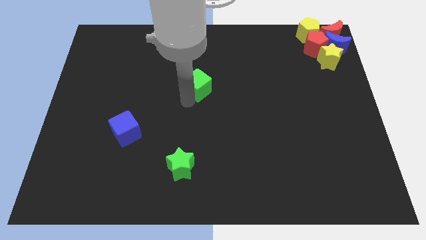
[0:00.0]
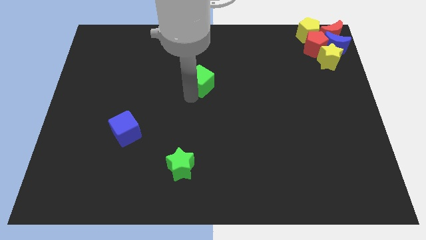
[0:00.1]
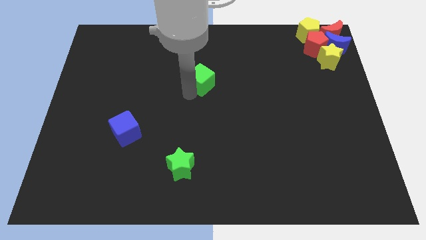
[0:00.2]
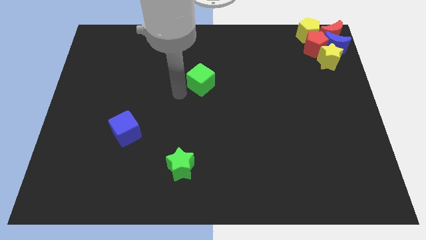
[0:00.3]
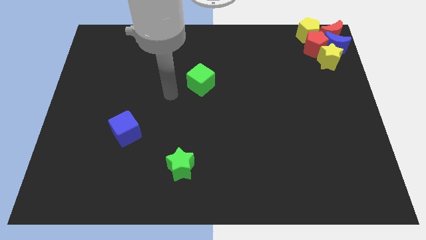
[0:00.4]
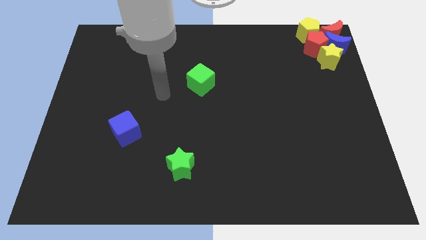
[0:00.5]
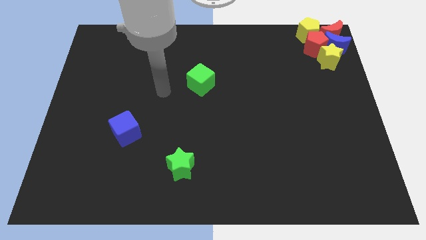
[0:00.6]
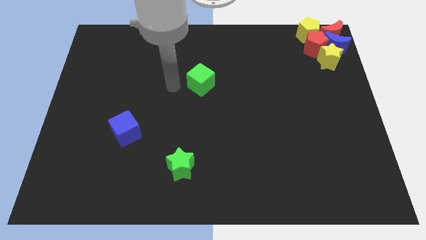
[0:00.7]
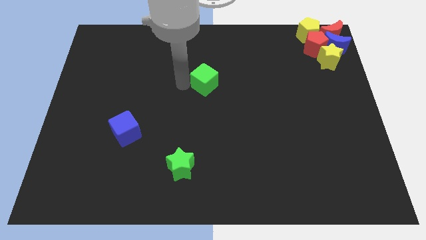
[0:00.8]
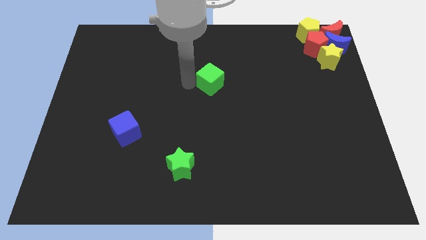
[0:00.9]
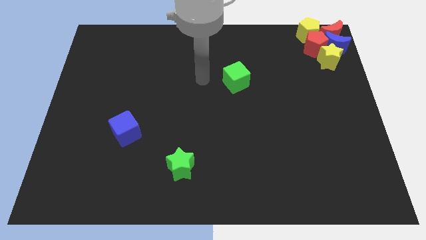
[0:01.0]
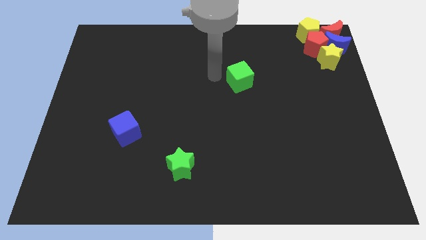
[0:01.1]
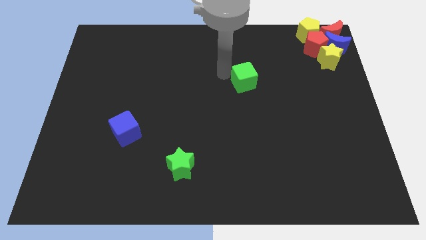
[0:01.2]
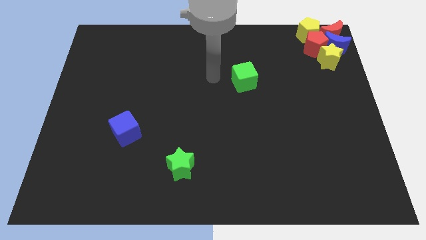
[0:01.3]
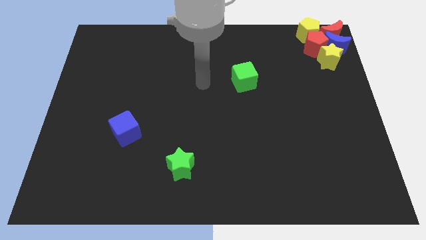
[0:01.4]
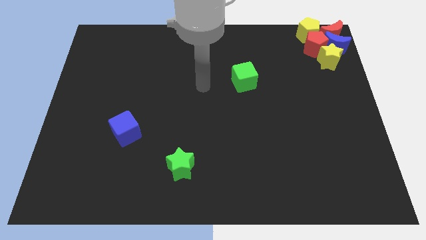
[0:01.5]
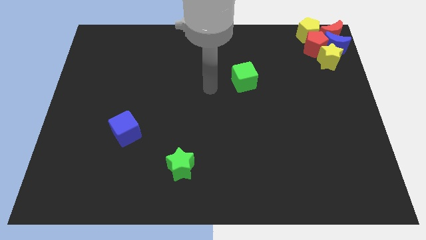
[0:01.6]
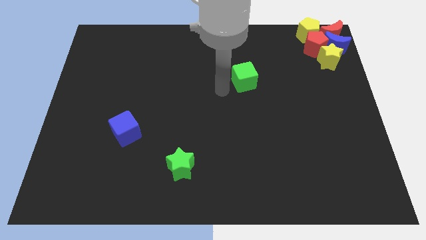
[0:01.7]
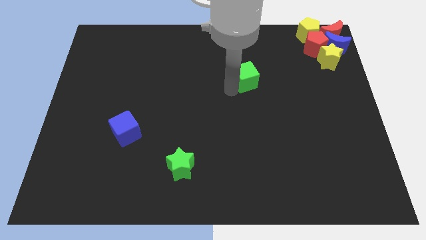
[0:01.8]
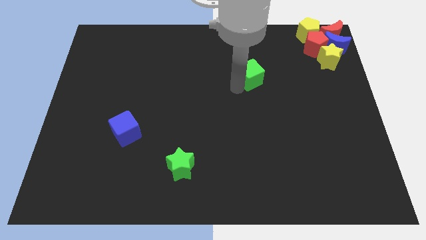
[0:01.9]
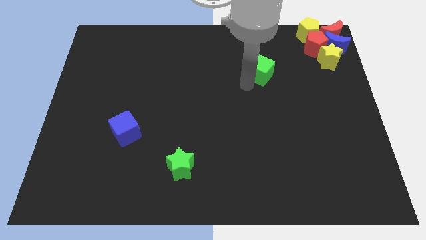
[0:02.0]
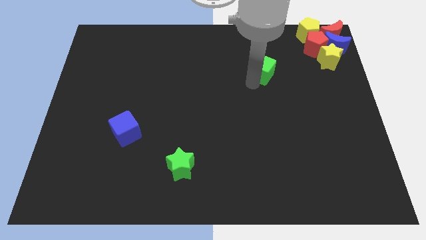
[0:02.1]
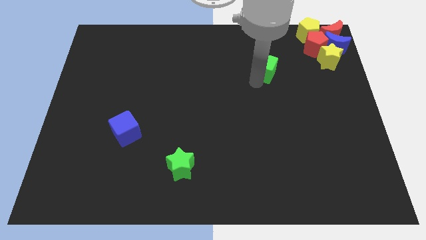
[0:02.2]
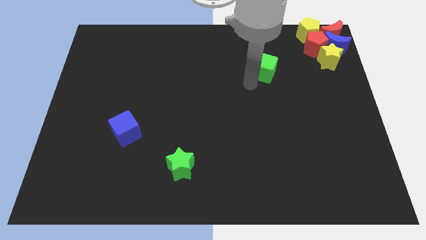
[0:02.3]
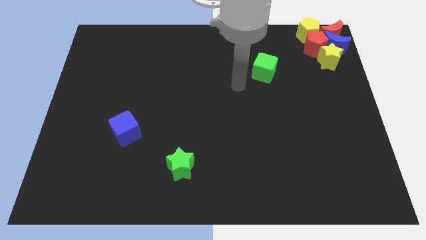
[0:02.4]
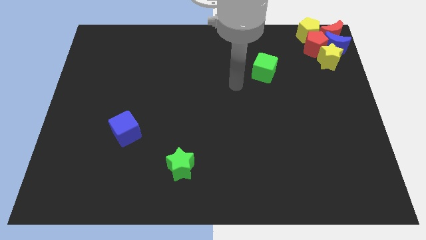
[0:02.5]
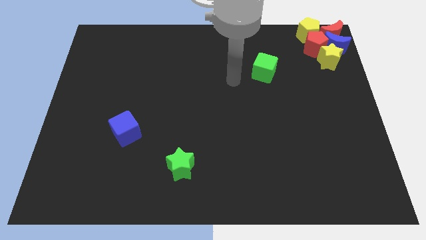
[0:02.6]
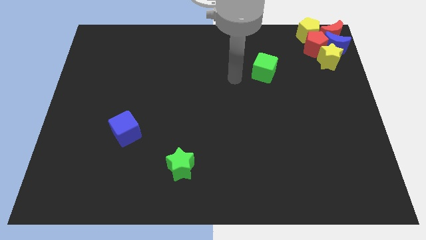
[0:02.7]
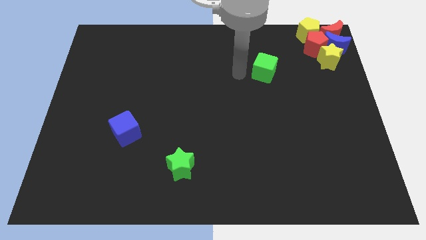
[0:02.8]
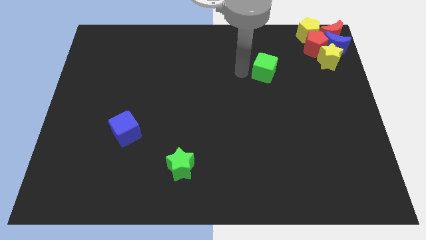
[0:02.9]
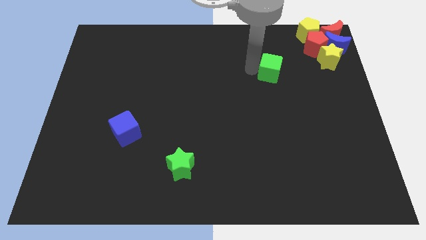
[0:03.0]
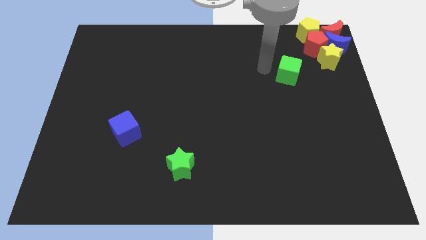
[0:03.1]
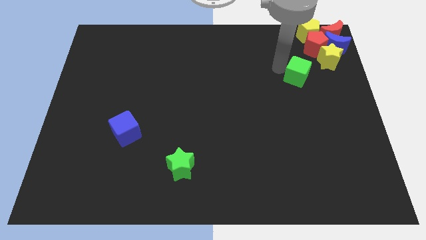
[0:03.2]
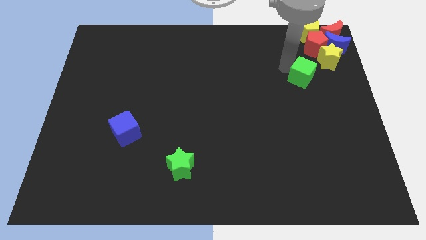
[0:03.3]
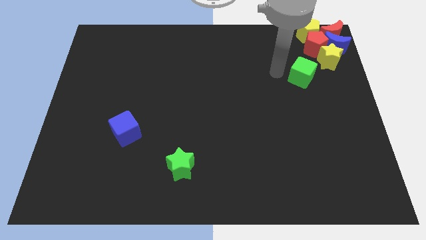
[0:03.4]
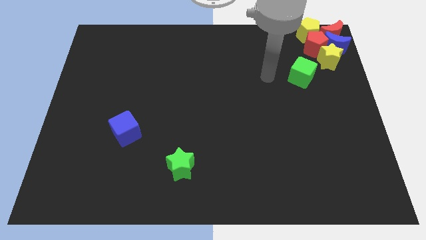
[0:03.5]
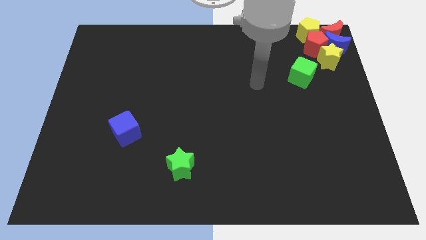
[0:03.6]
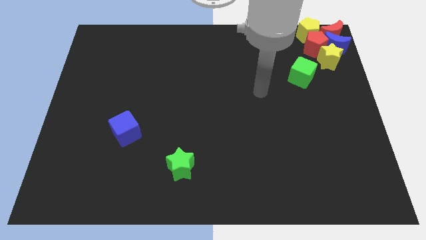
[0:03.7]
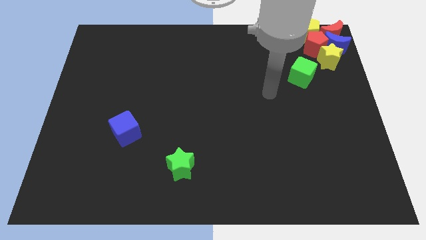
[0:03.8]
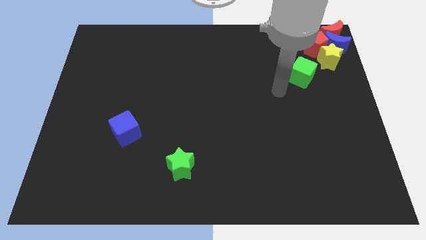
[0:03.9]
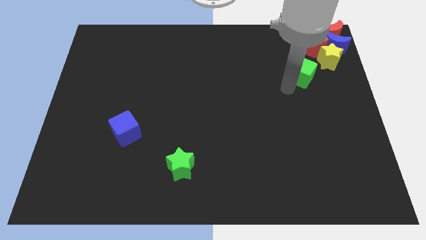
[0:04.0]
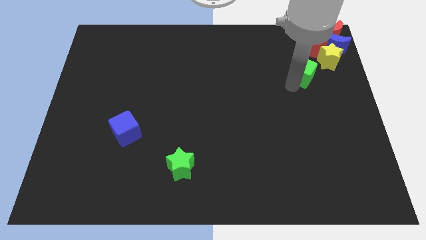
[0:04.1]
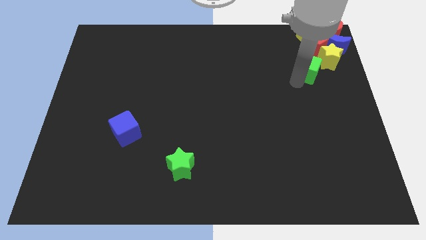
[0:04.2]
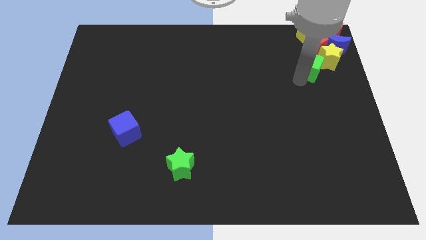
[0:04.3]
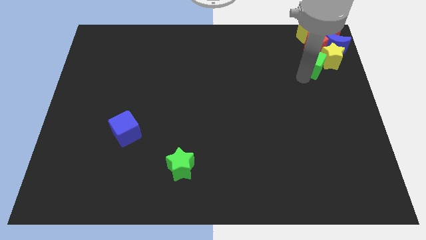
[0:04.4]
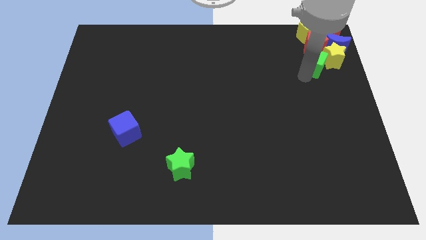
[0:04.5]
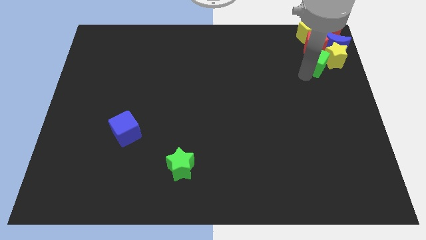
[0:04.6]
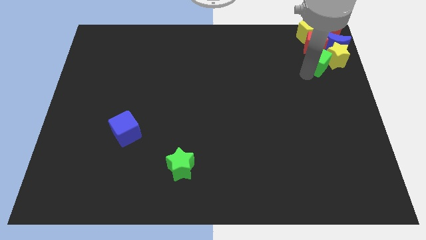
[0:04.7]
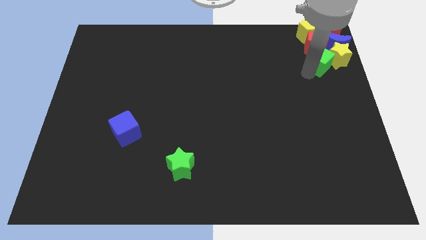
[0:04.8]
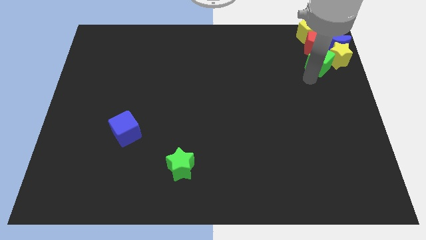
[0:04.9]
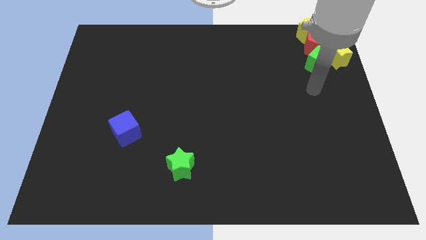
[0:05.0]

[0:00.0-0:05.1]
move the green cube to the group of blocks

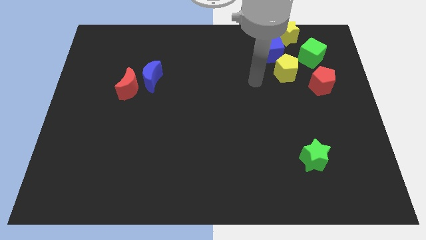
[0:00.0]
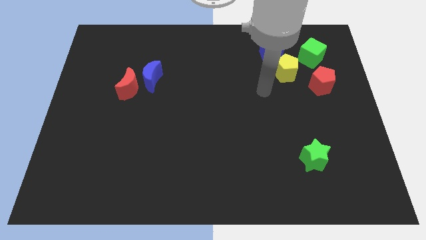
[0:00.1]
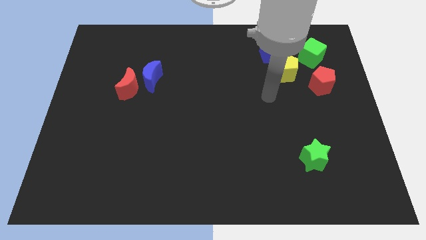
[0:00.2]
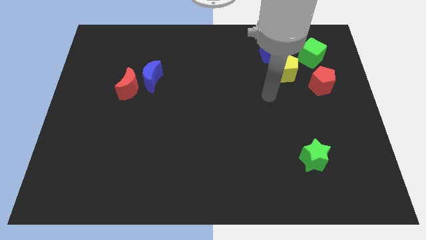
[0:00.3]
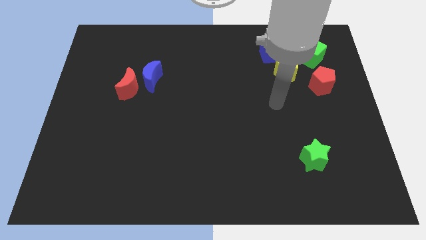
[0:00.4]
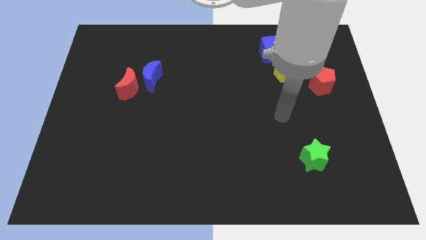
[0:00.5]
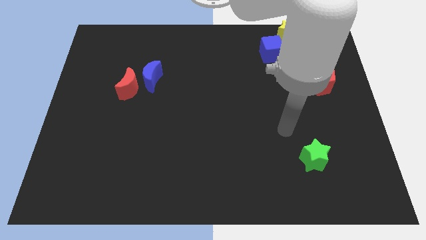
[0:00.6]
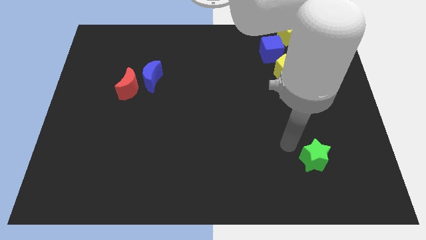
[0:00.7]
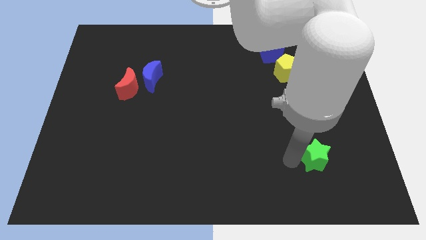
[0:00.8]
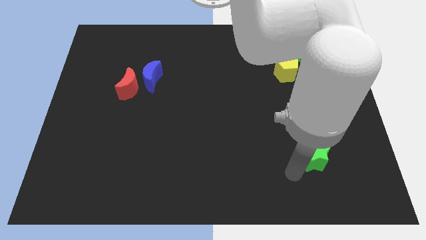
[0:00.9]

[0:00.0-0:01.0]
point your arm at the left of the green star

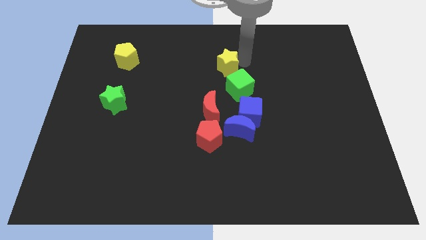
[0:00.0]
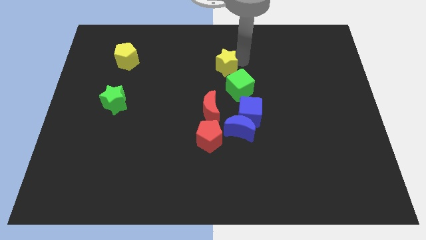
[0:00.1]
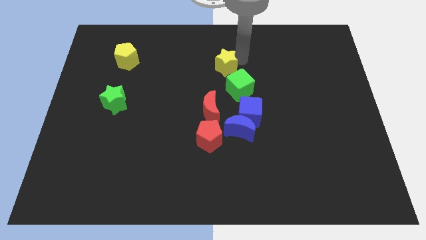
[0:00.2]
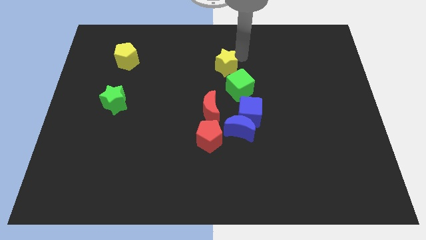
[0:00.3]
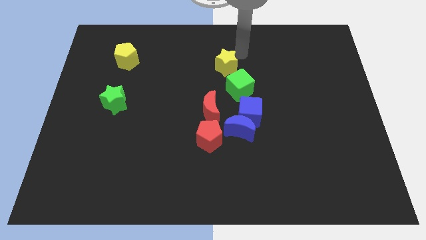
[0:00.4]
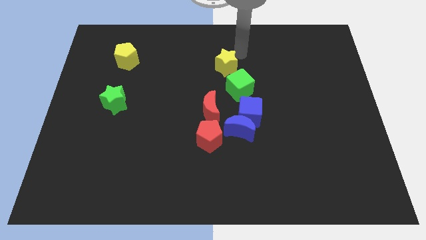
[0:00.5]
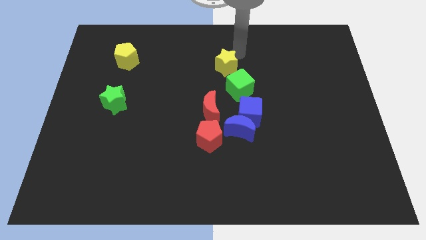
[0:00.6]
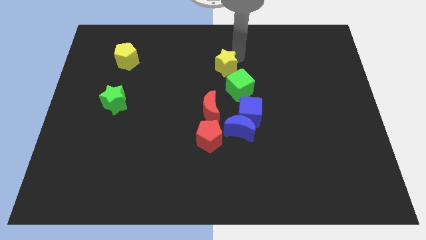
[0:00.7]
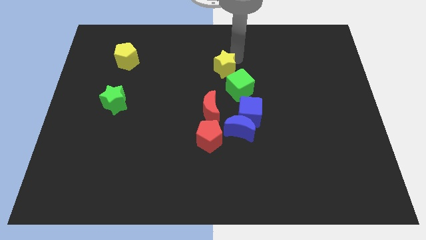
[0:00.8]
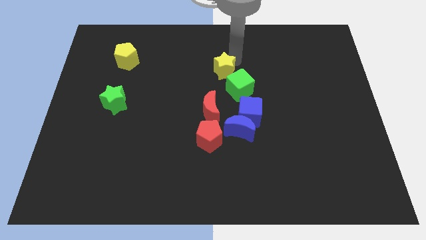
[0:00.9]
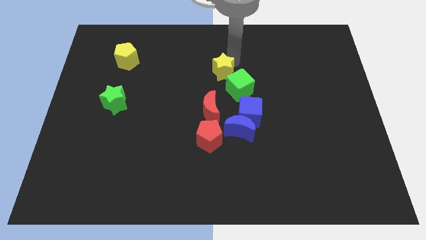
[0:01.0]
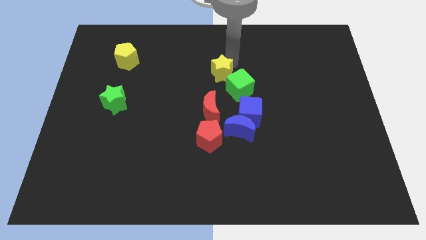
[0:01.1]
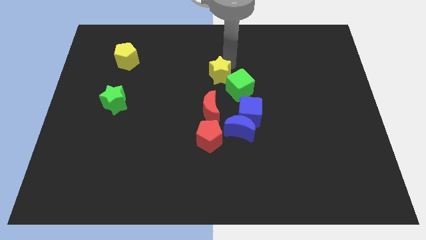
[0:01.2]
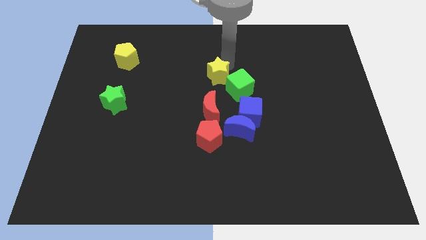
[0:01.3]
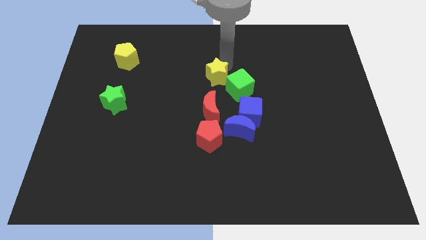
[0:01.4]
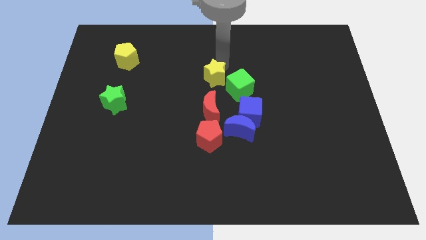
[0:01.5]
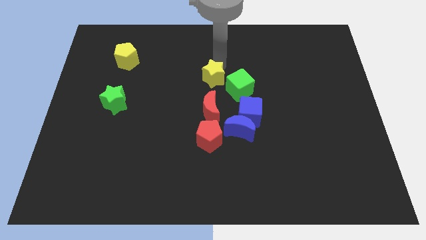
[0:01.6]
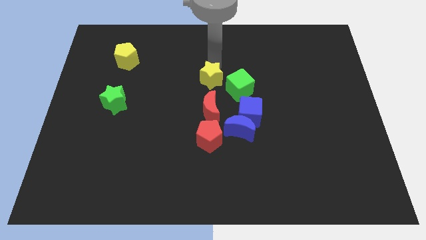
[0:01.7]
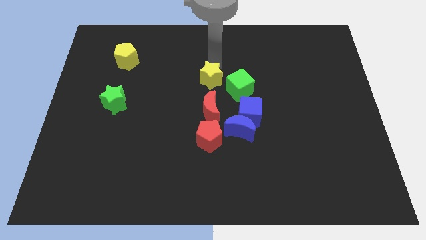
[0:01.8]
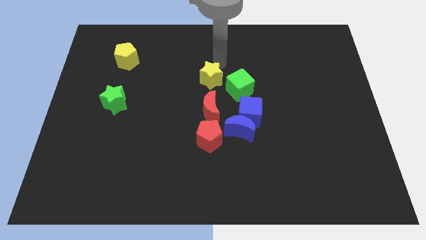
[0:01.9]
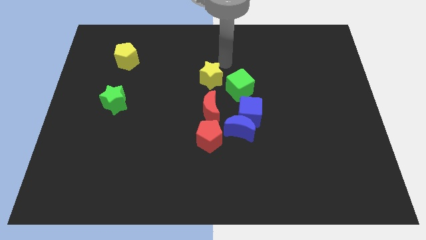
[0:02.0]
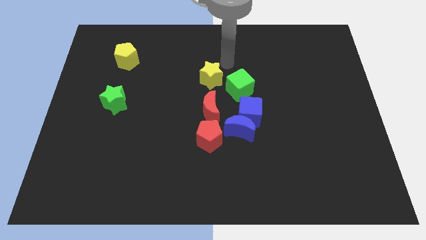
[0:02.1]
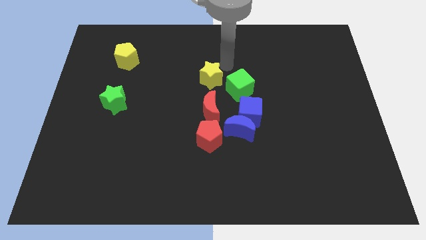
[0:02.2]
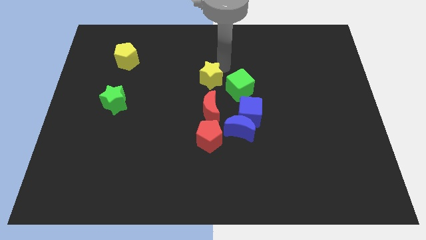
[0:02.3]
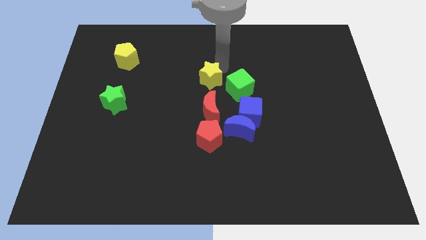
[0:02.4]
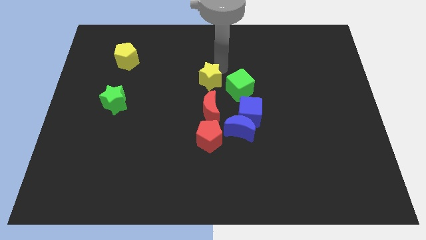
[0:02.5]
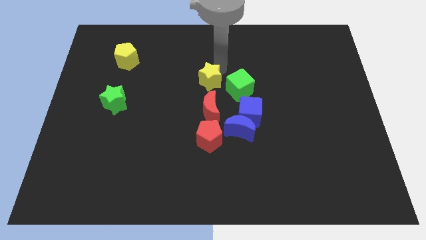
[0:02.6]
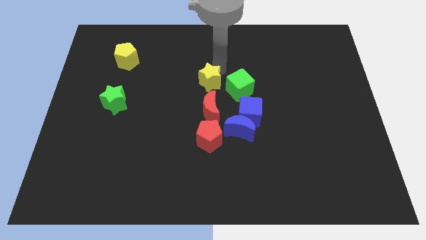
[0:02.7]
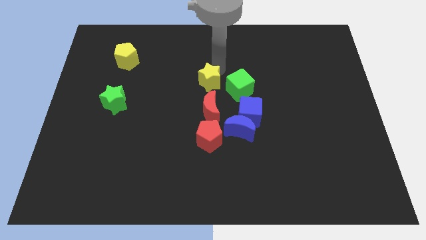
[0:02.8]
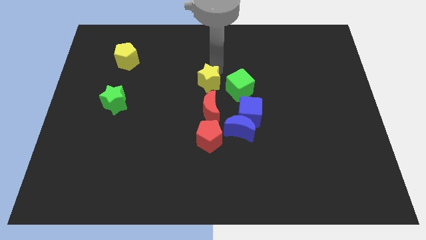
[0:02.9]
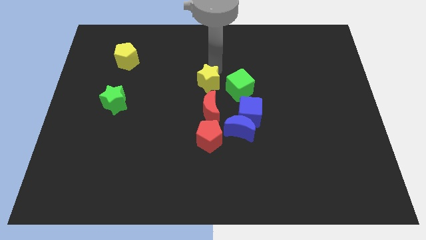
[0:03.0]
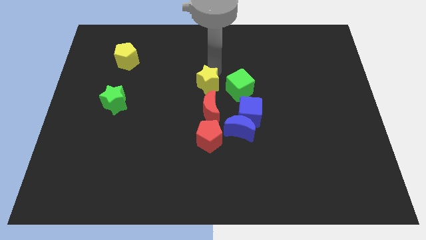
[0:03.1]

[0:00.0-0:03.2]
move yellow star to the top of the red crescent
